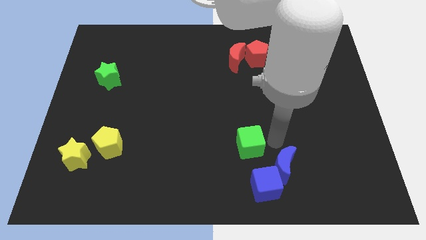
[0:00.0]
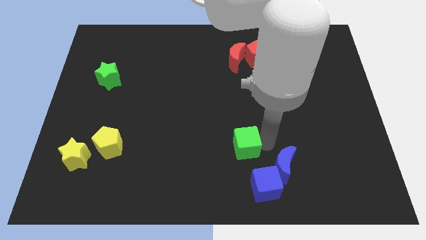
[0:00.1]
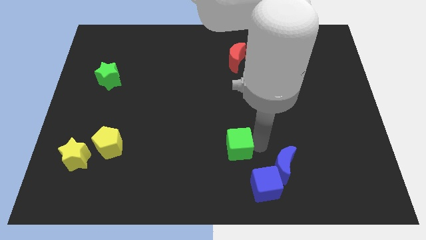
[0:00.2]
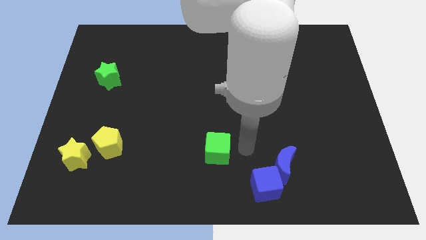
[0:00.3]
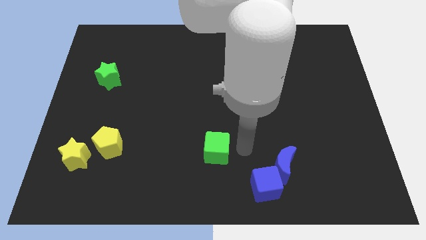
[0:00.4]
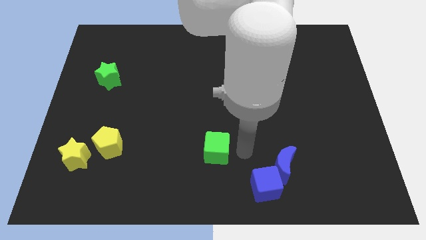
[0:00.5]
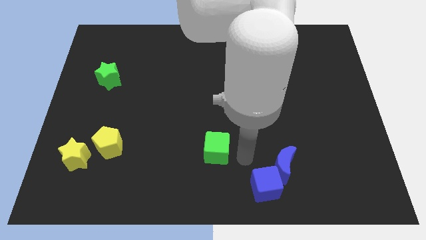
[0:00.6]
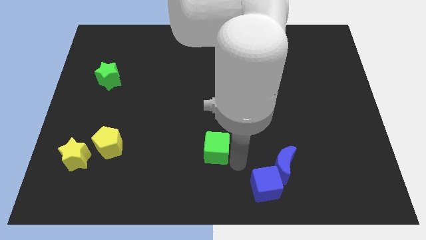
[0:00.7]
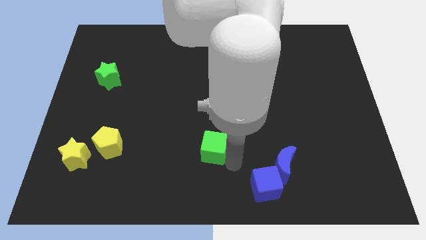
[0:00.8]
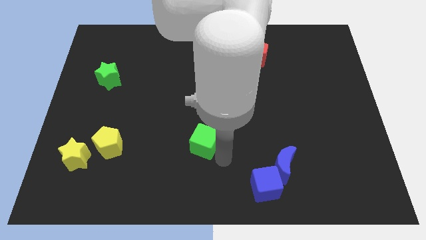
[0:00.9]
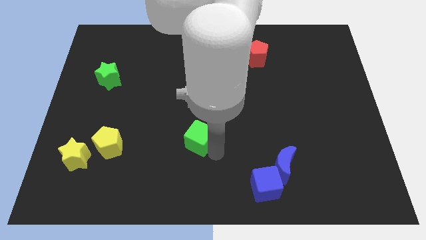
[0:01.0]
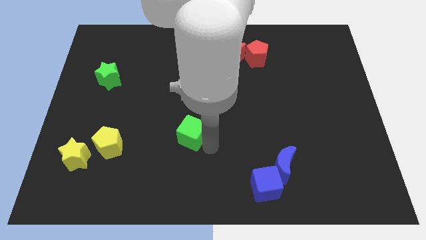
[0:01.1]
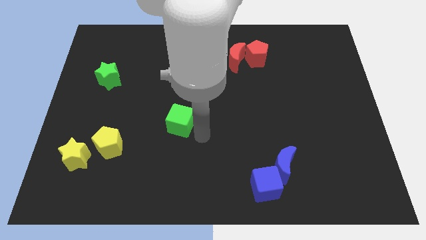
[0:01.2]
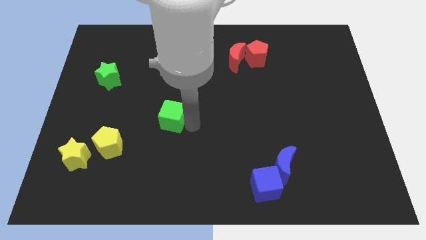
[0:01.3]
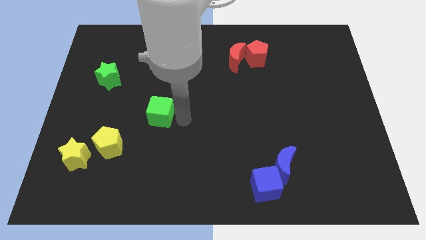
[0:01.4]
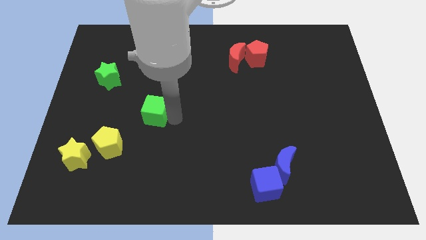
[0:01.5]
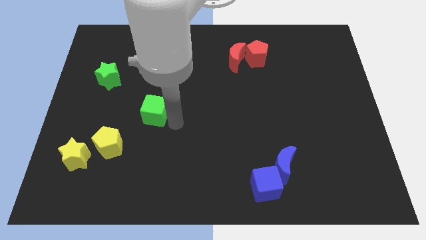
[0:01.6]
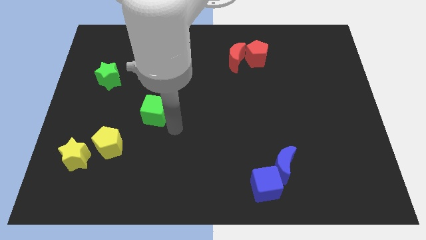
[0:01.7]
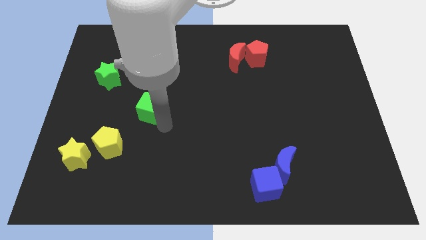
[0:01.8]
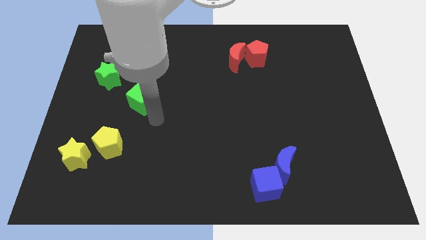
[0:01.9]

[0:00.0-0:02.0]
slide the green cube towards the green star

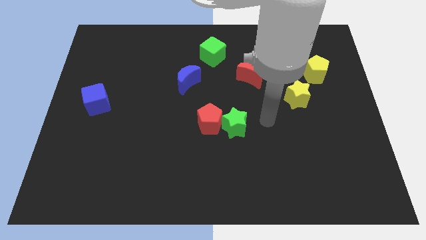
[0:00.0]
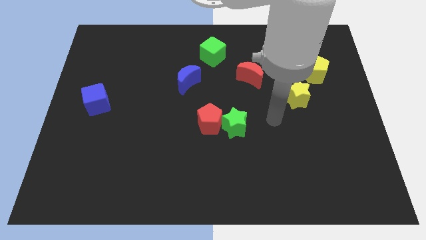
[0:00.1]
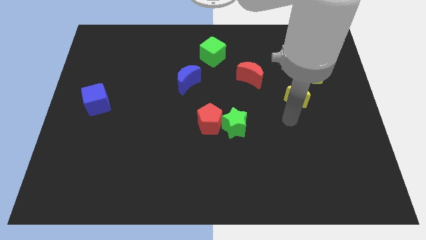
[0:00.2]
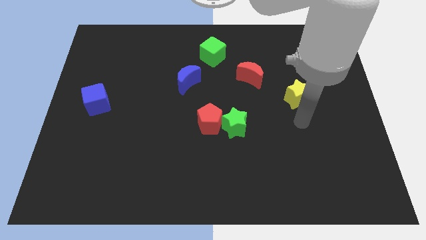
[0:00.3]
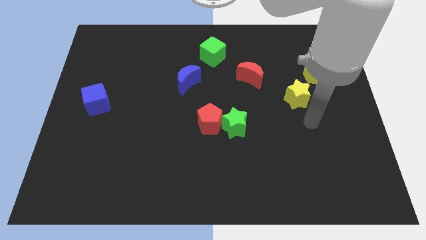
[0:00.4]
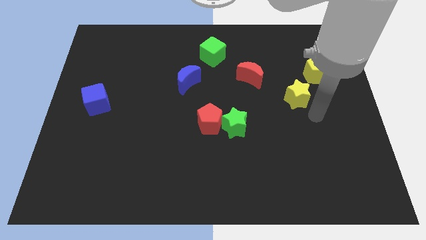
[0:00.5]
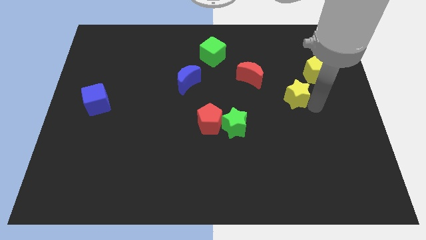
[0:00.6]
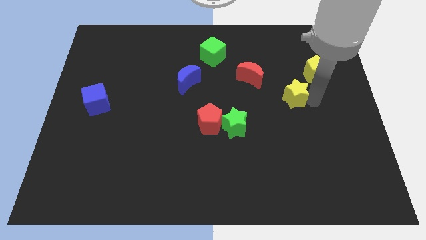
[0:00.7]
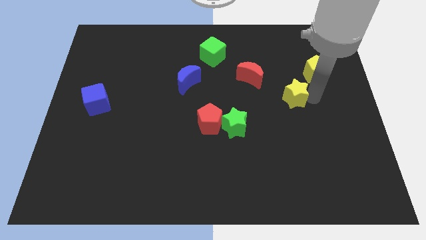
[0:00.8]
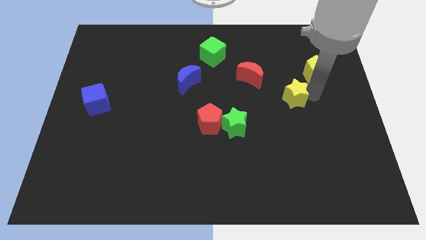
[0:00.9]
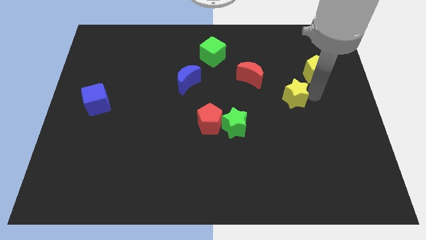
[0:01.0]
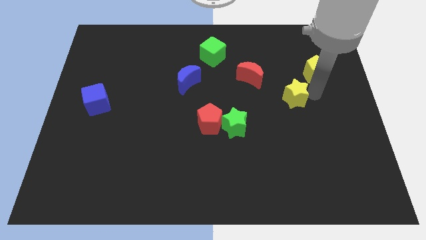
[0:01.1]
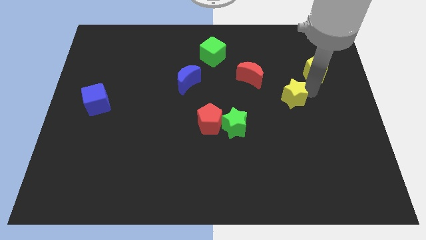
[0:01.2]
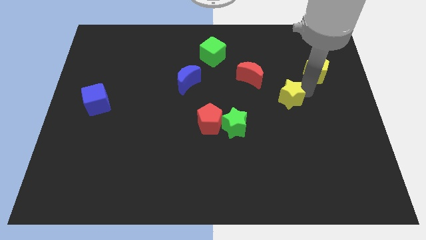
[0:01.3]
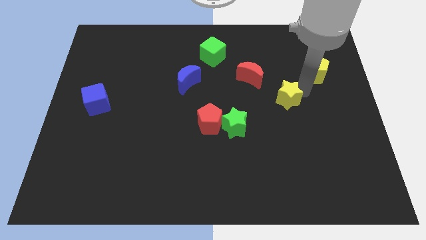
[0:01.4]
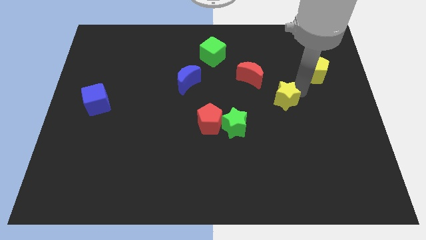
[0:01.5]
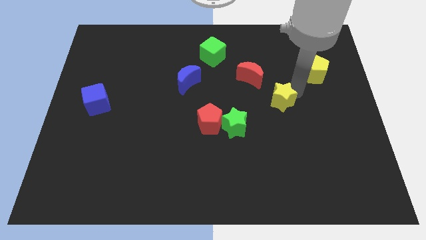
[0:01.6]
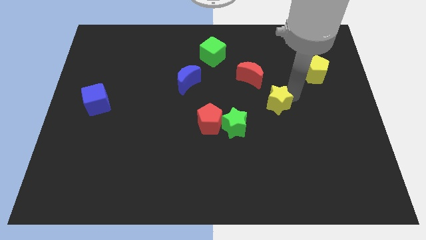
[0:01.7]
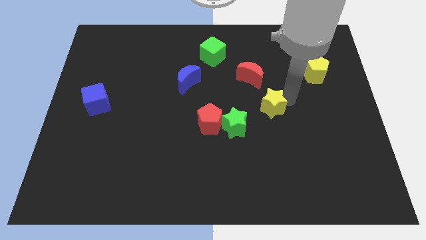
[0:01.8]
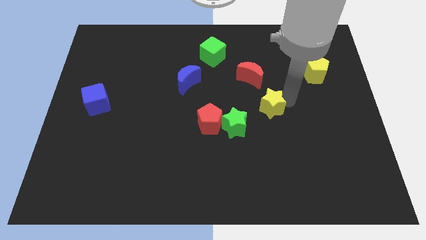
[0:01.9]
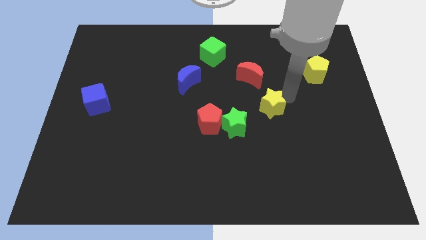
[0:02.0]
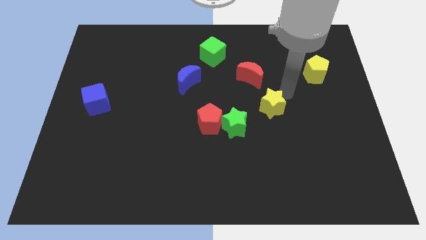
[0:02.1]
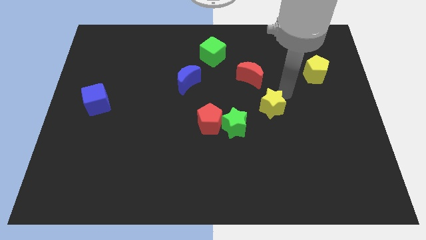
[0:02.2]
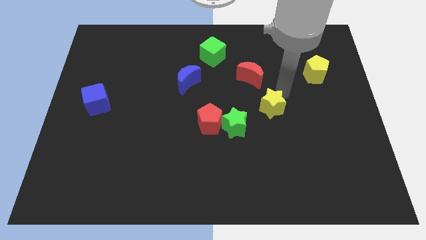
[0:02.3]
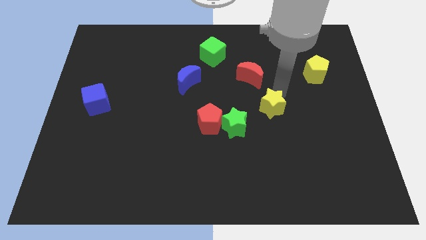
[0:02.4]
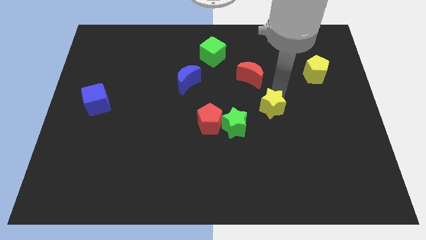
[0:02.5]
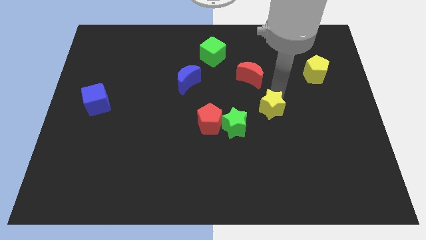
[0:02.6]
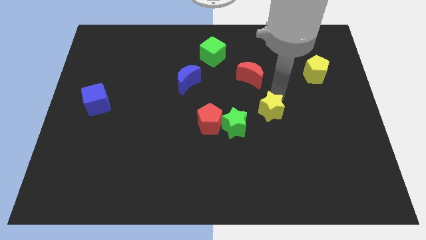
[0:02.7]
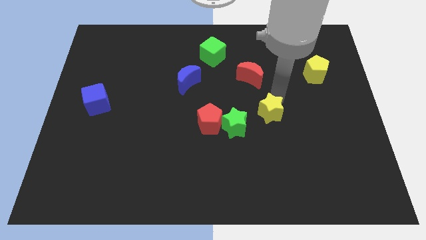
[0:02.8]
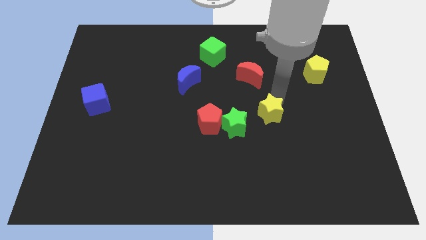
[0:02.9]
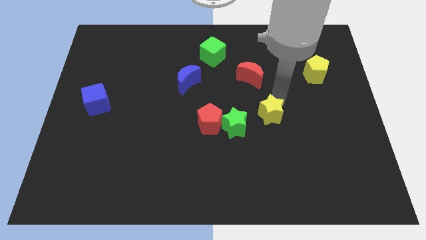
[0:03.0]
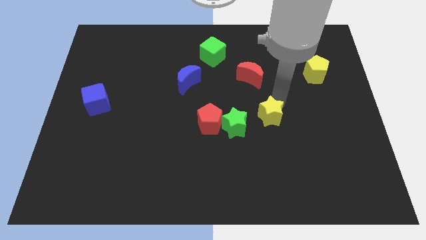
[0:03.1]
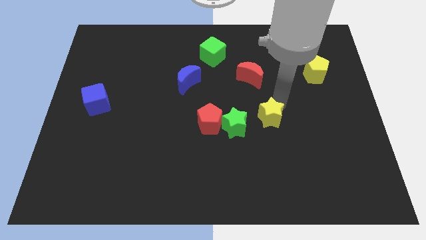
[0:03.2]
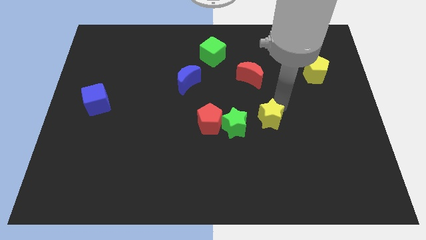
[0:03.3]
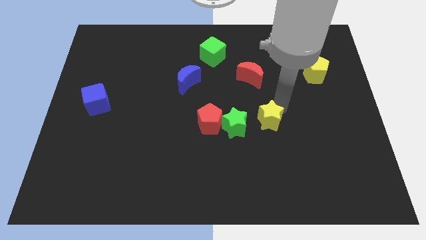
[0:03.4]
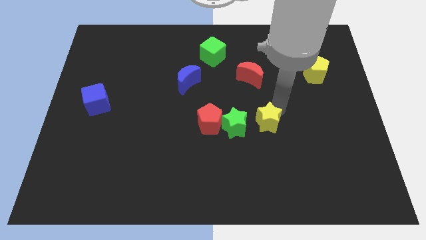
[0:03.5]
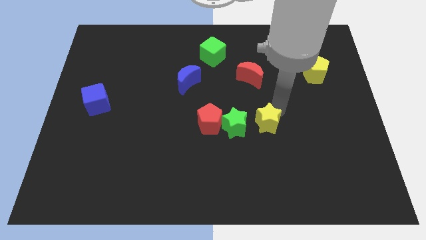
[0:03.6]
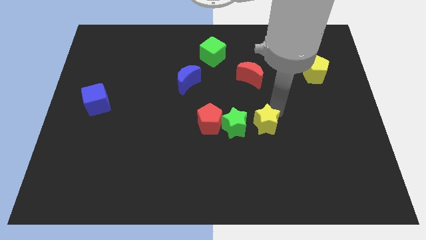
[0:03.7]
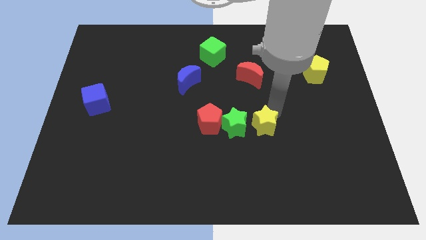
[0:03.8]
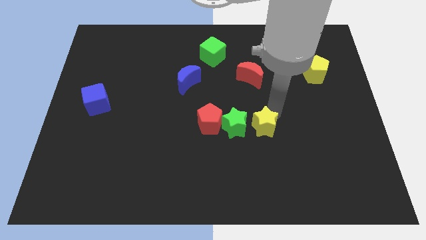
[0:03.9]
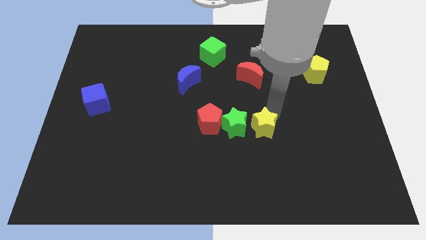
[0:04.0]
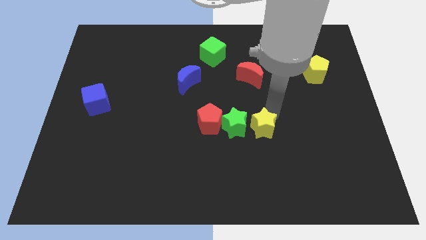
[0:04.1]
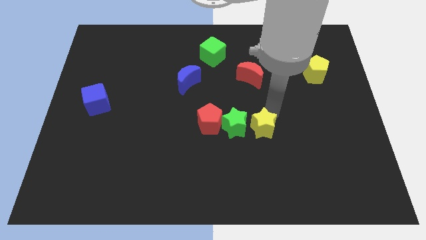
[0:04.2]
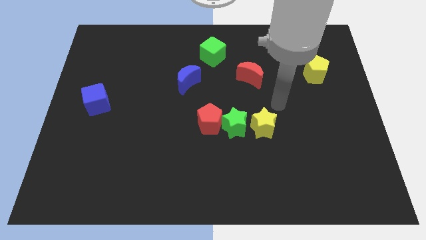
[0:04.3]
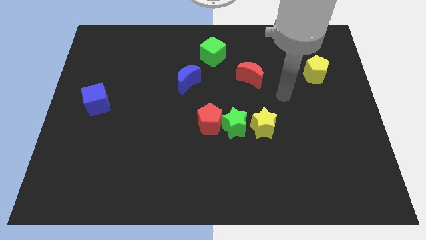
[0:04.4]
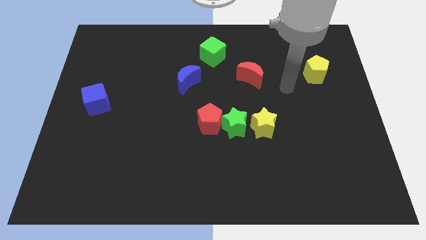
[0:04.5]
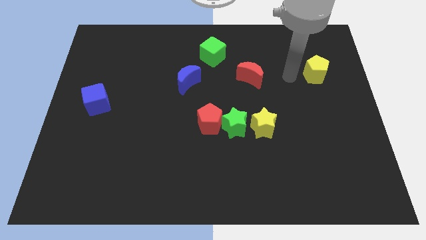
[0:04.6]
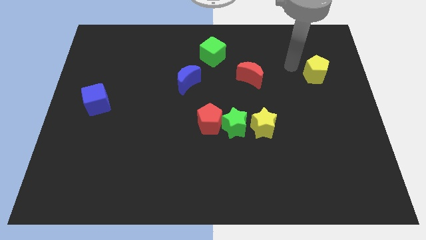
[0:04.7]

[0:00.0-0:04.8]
put the yellow star right to the green star

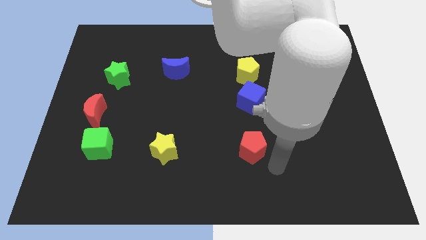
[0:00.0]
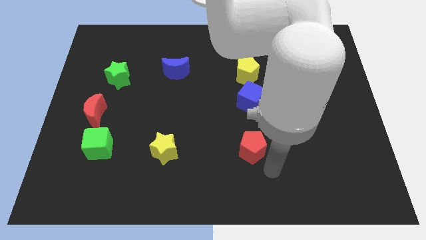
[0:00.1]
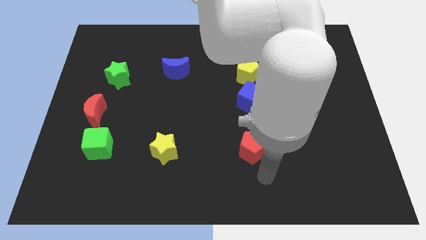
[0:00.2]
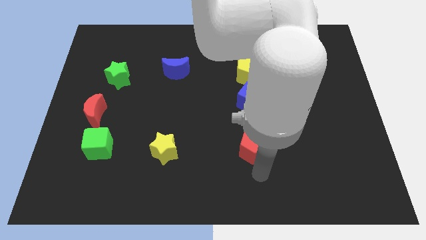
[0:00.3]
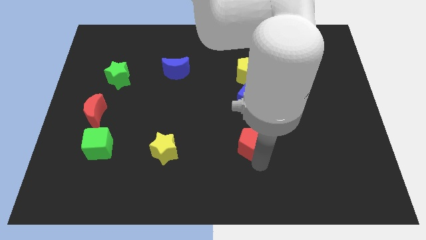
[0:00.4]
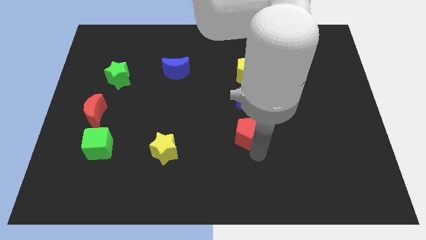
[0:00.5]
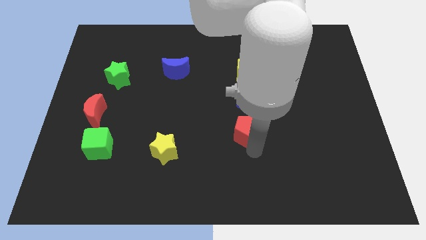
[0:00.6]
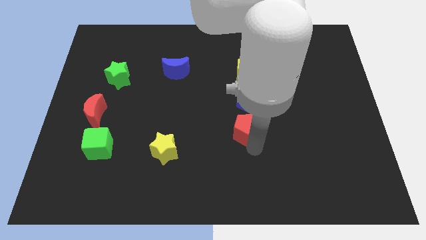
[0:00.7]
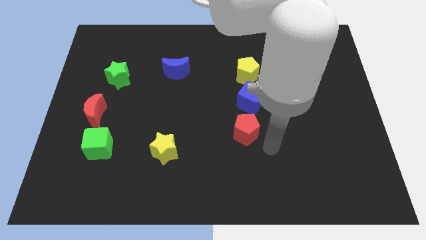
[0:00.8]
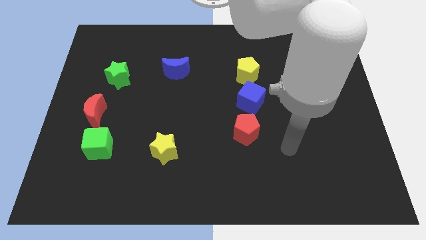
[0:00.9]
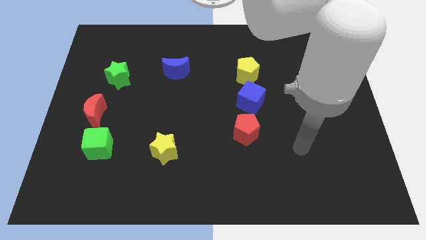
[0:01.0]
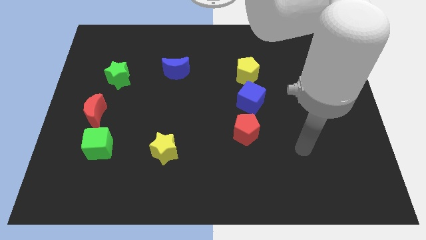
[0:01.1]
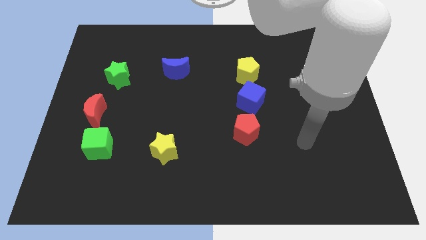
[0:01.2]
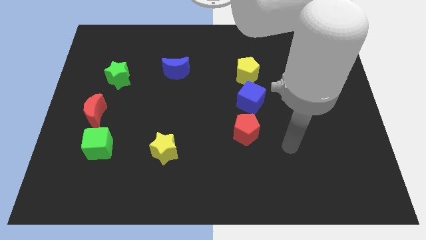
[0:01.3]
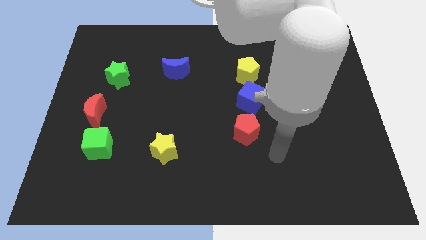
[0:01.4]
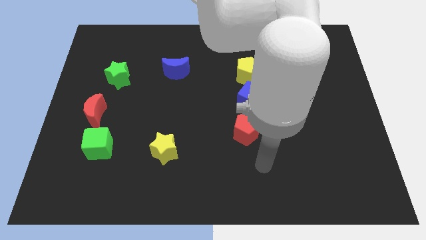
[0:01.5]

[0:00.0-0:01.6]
push red pentagon to the bottom of the blue cube

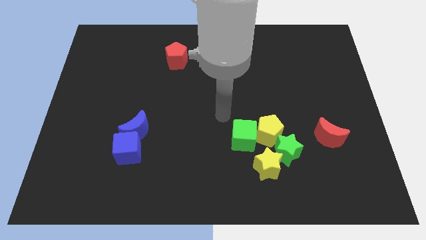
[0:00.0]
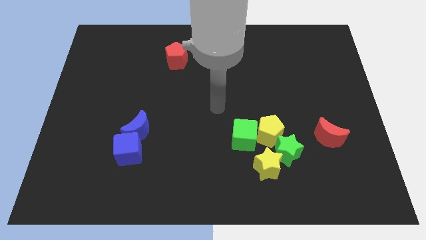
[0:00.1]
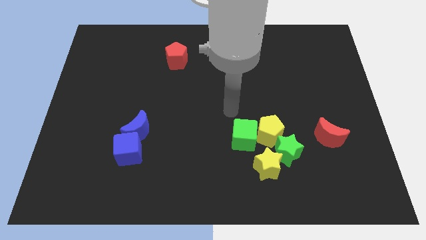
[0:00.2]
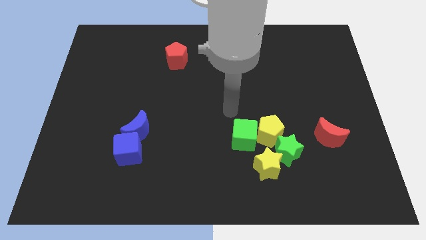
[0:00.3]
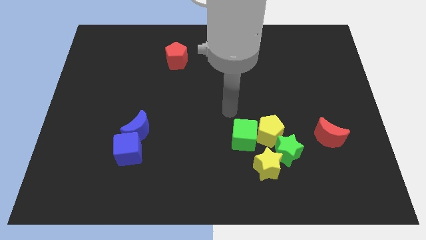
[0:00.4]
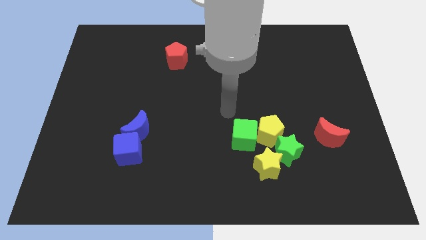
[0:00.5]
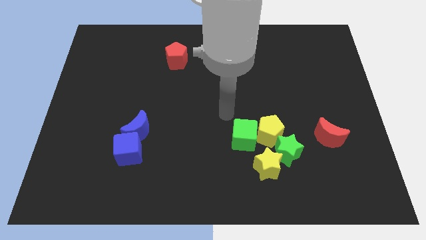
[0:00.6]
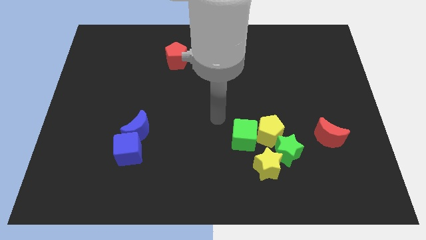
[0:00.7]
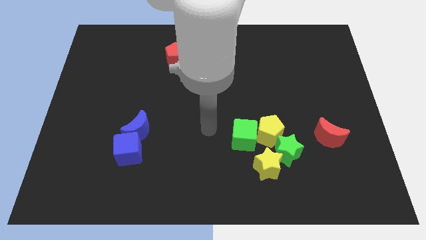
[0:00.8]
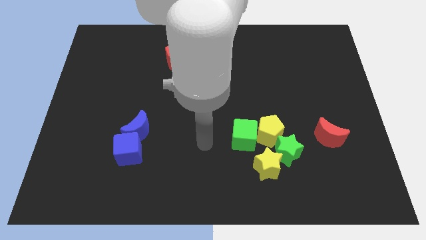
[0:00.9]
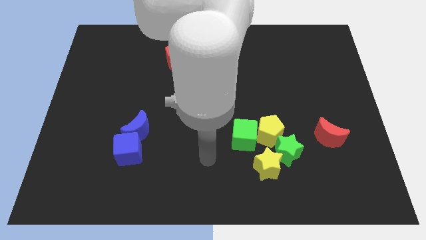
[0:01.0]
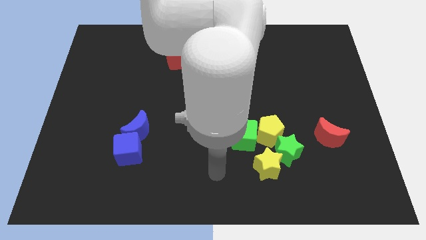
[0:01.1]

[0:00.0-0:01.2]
move your arm towards the bottom centre of the board
